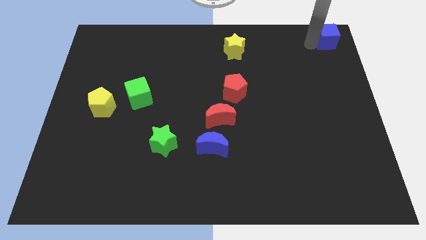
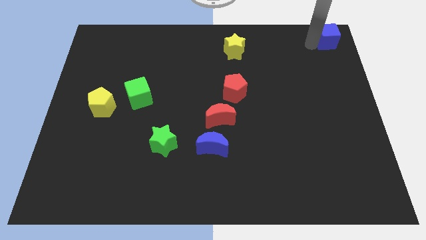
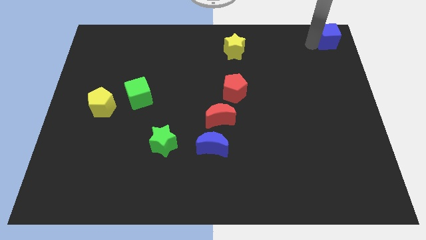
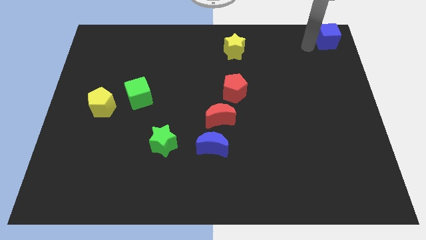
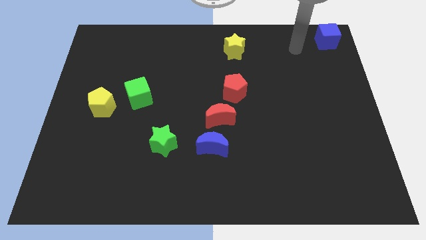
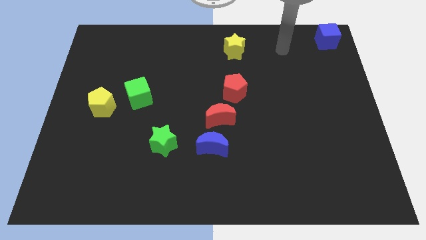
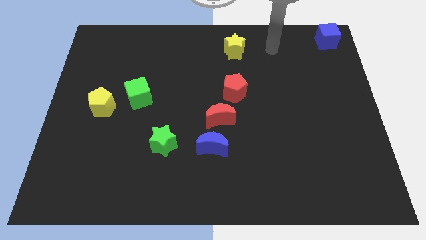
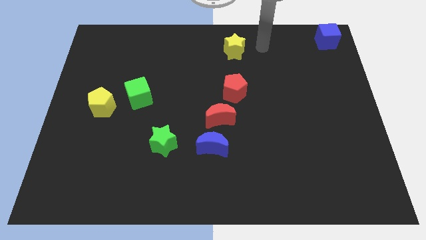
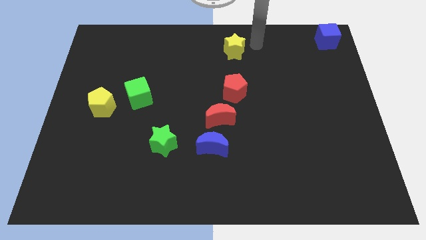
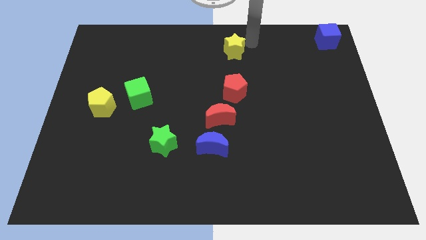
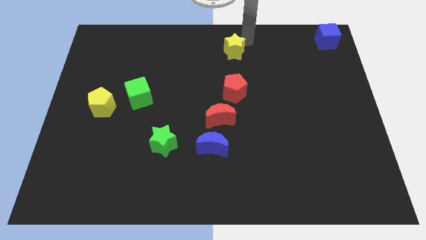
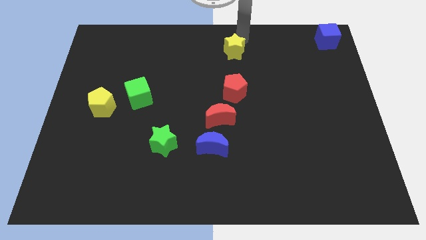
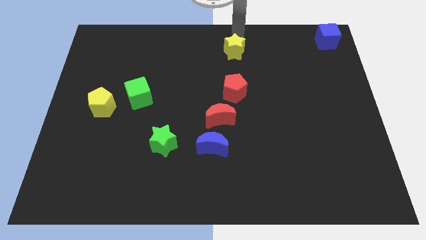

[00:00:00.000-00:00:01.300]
move your arm to the top of the yellow star

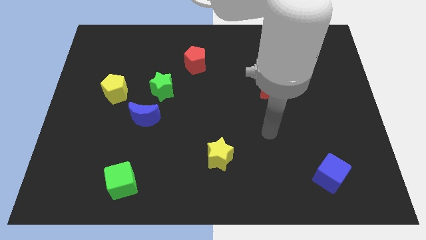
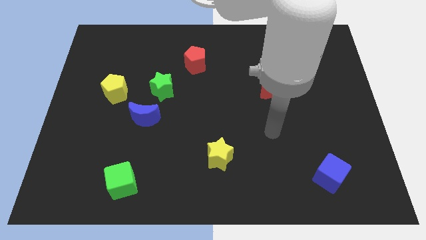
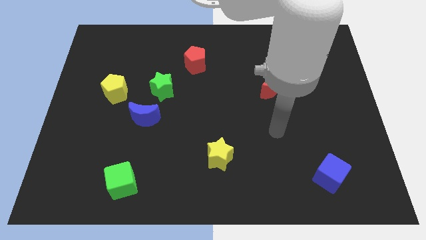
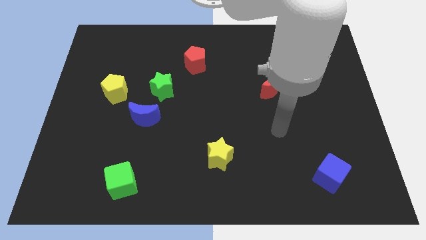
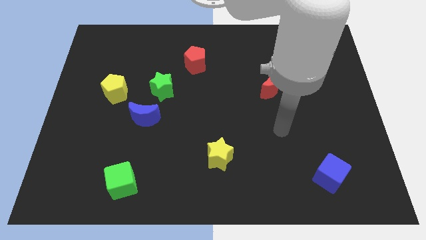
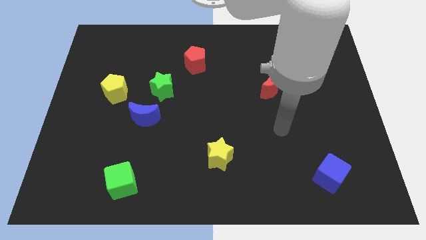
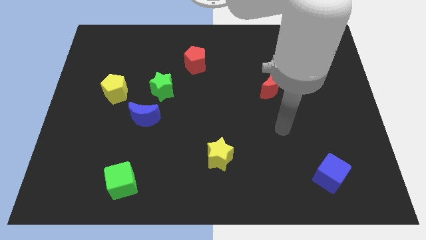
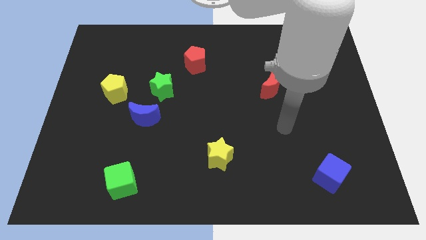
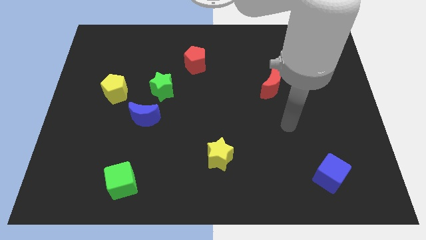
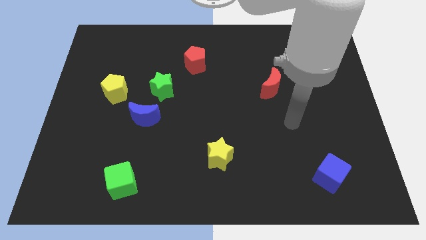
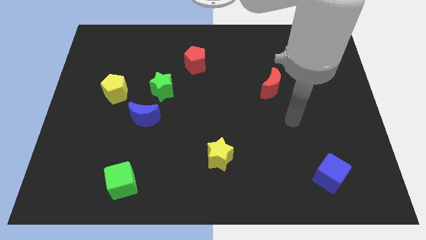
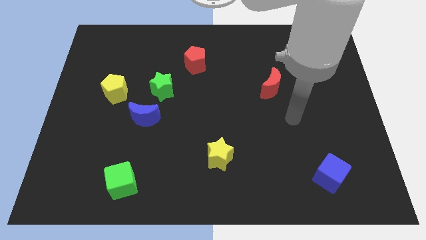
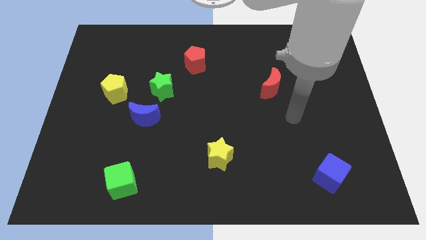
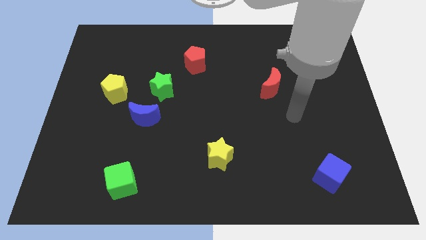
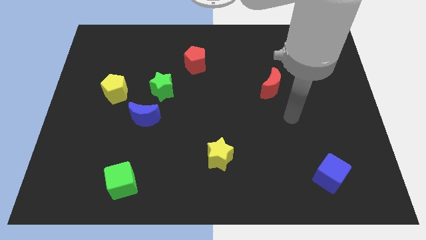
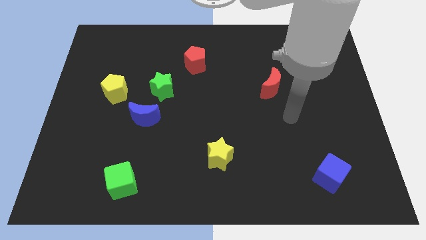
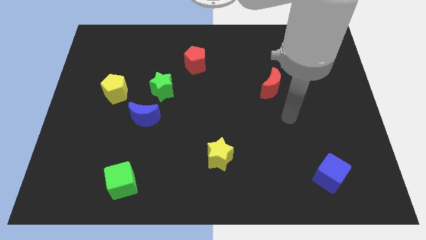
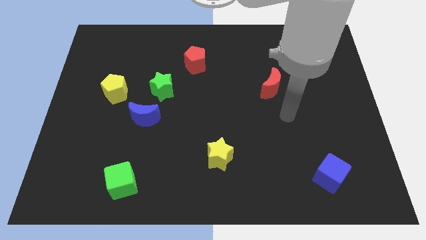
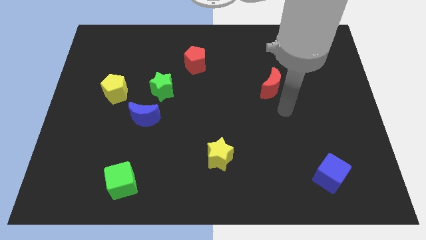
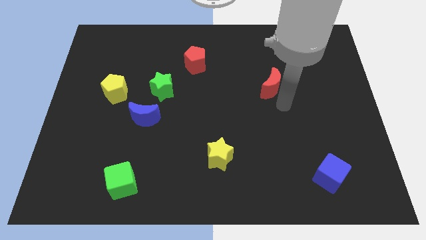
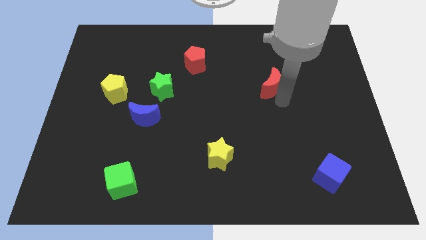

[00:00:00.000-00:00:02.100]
move your hand diagonally bottom right to the red moon

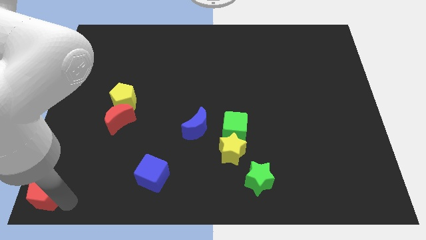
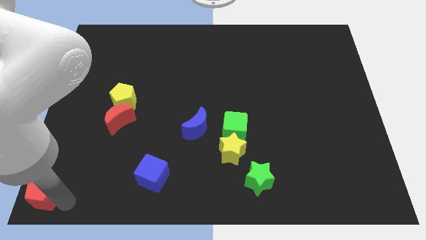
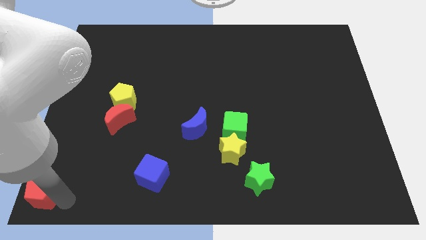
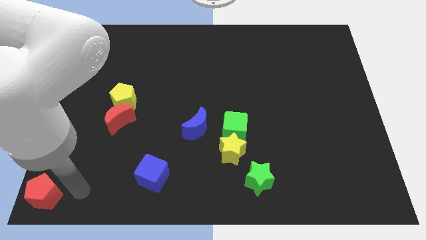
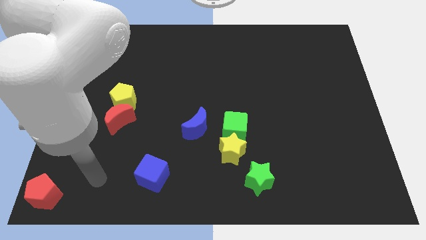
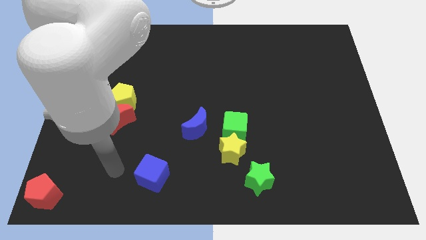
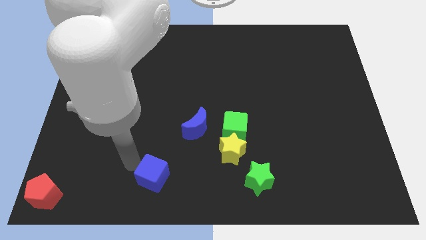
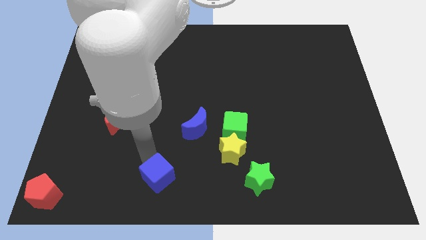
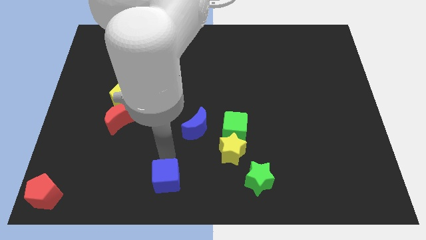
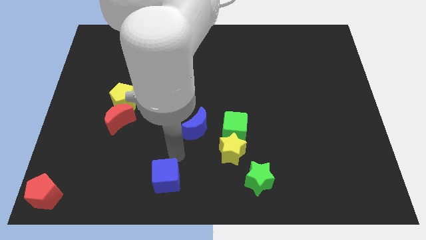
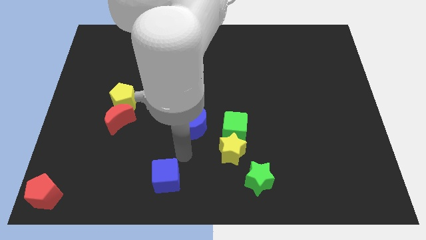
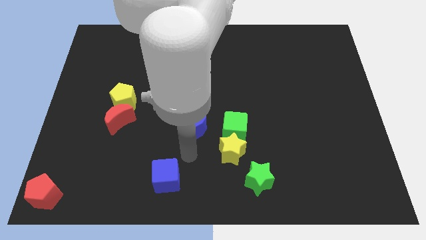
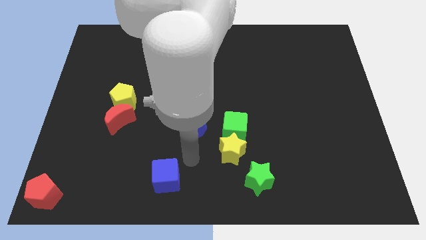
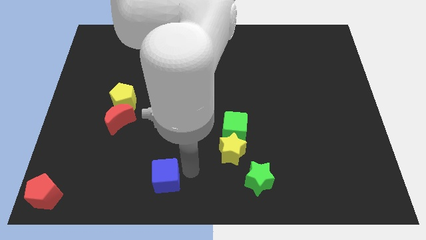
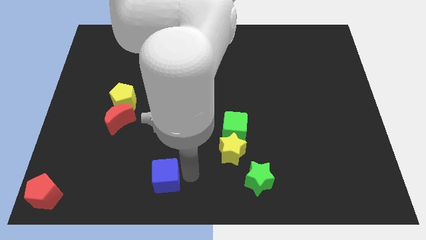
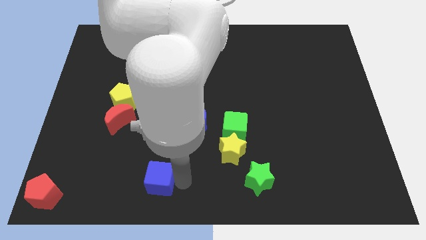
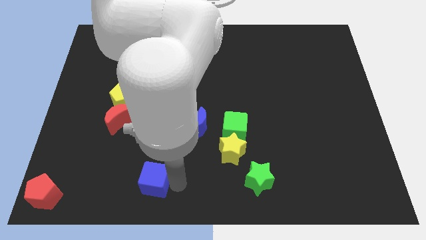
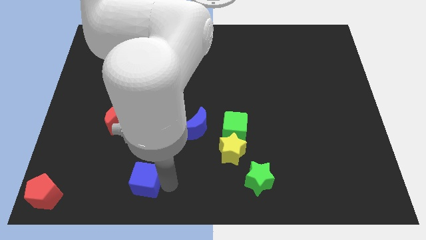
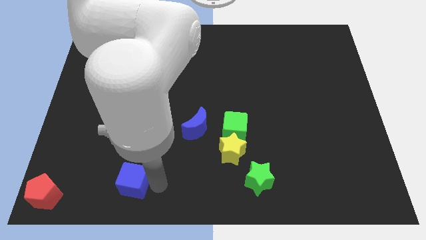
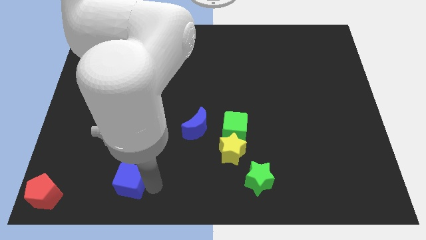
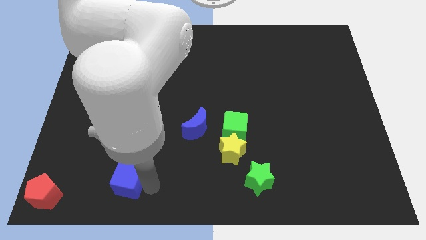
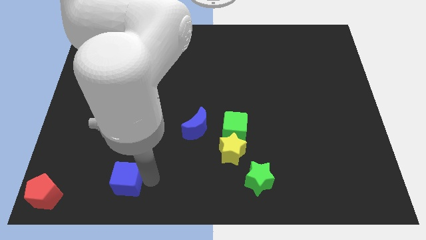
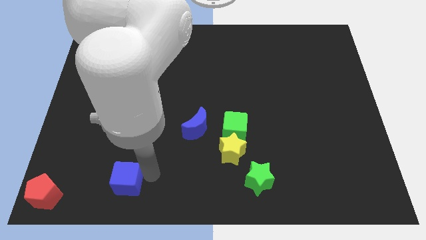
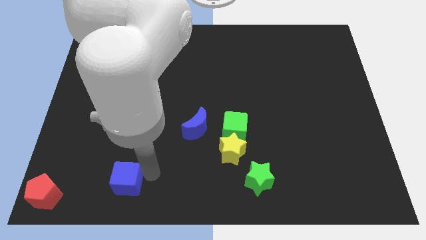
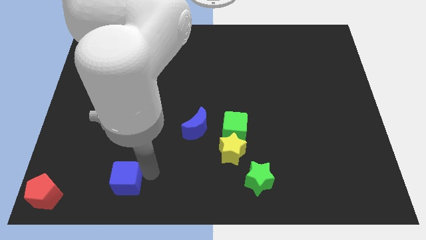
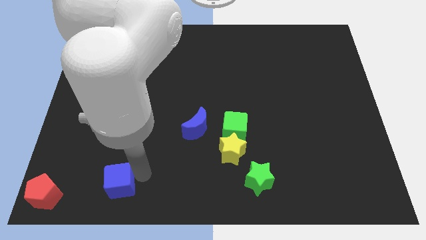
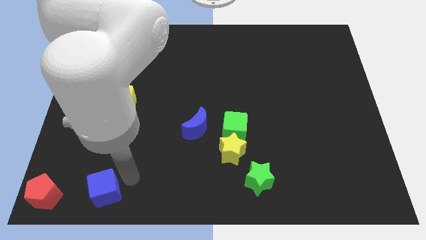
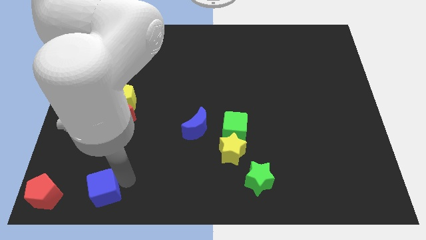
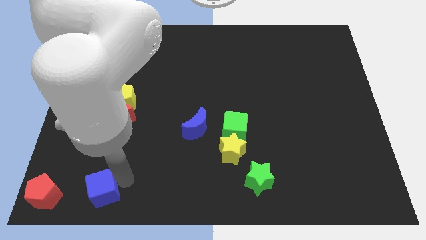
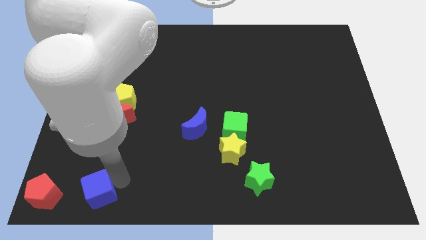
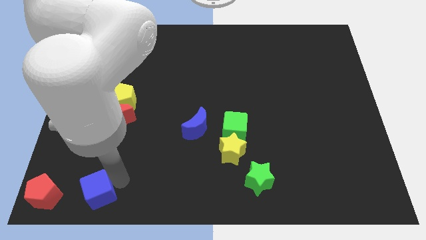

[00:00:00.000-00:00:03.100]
move the blue cube towards the red pentagon

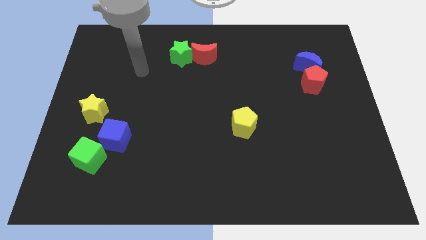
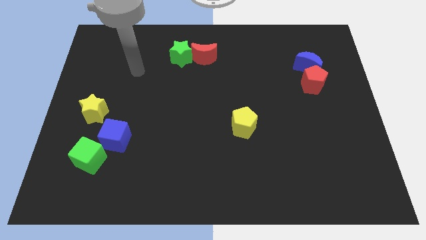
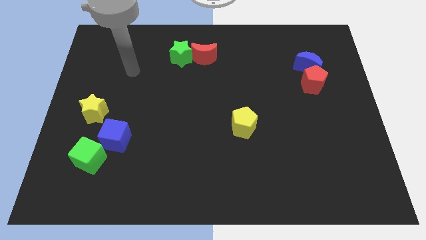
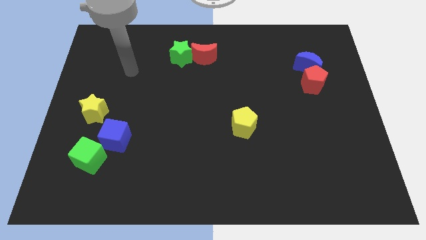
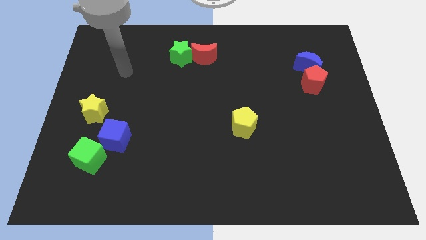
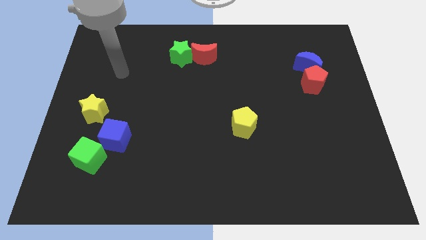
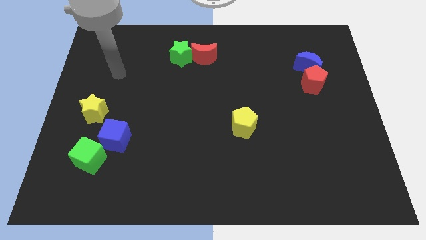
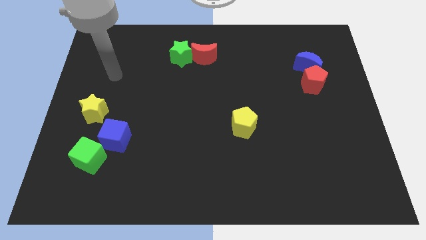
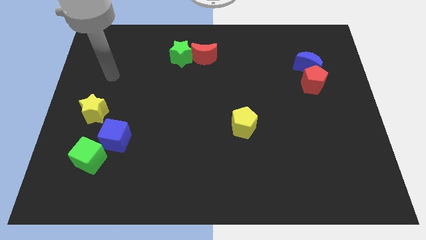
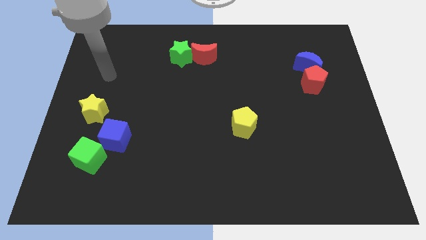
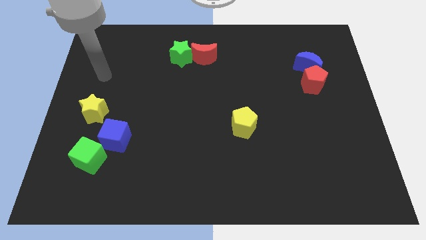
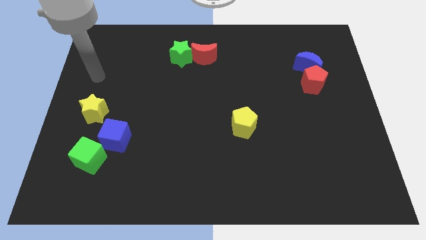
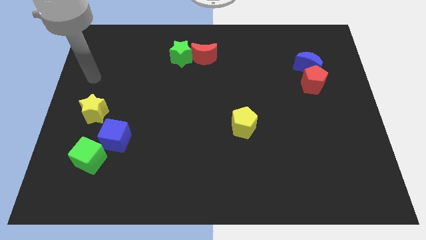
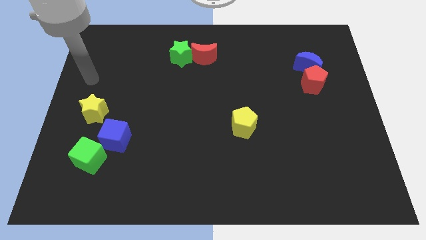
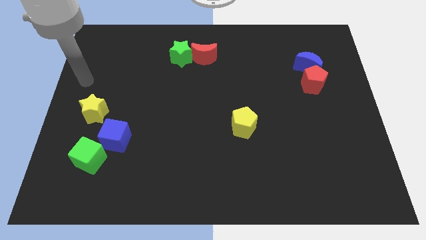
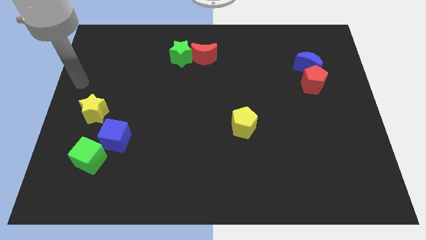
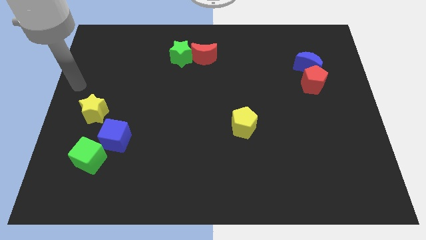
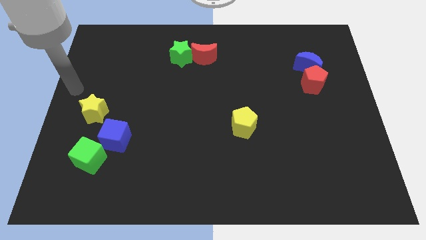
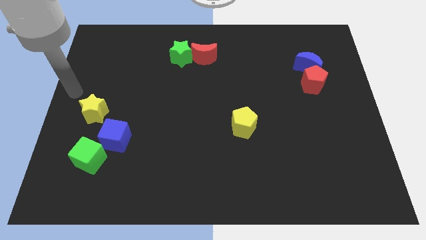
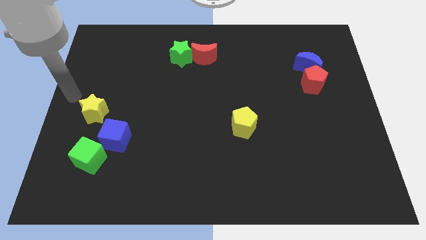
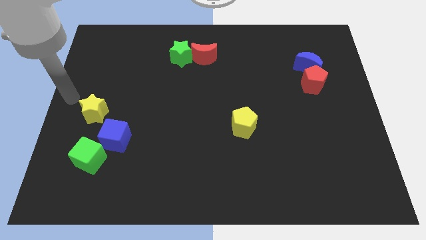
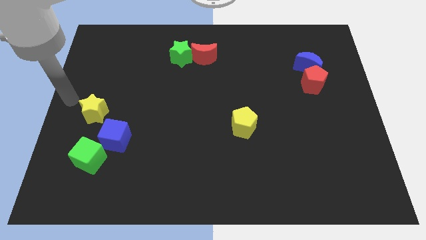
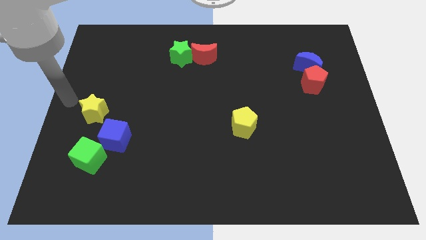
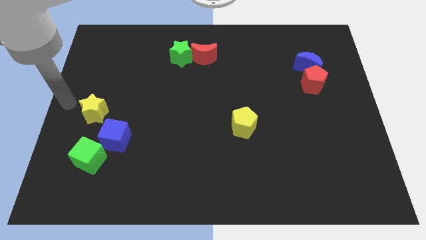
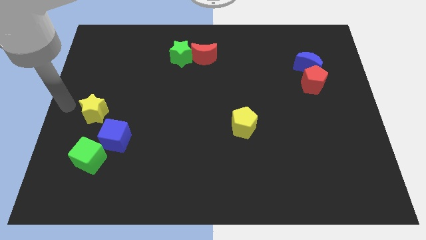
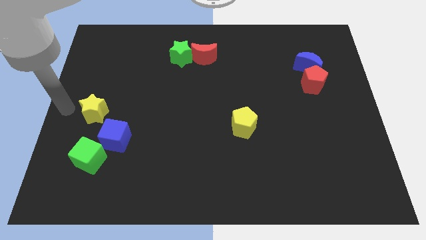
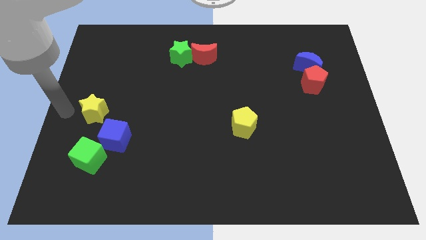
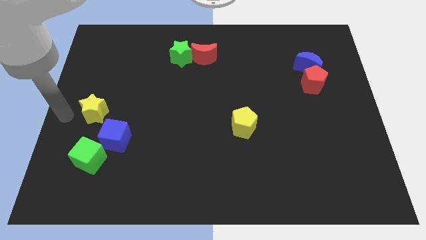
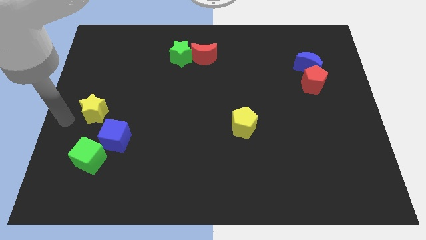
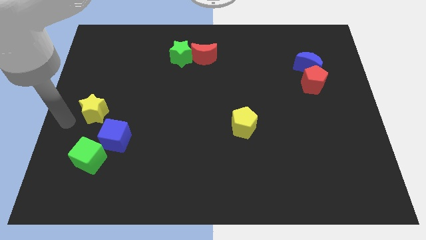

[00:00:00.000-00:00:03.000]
point the arm at the left side of the yellow star
